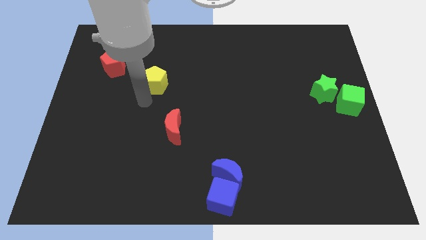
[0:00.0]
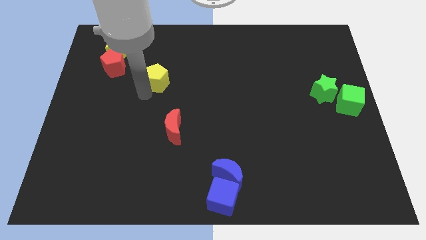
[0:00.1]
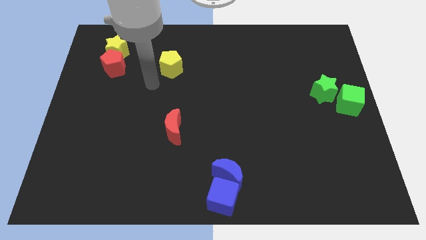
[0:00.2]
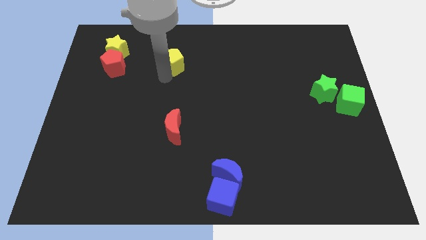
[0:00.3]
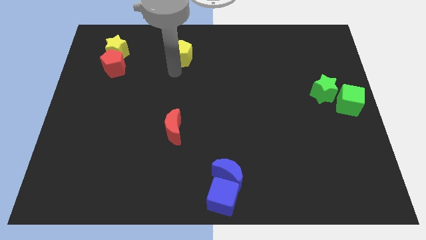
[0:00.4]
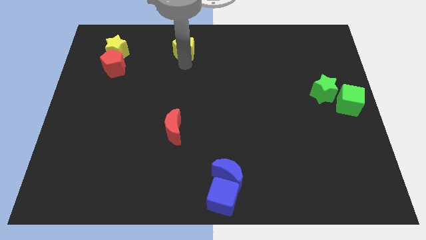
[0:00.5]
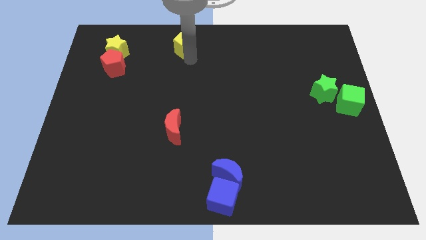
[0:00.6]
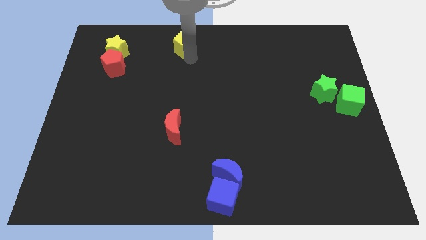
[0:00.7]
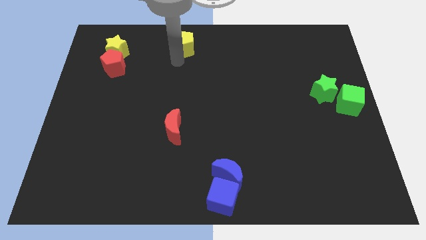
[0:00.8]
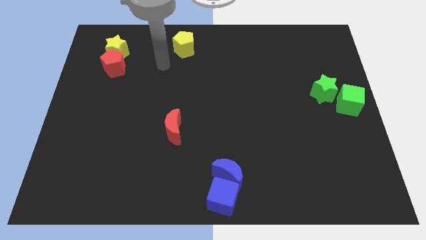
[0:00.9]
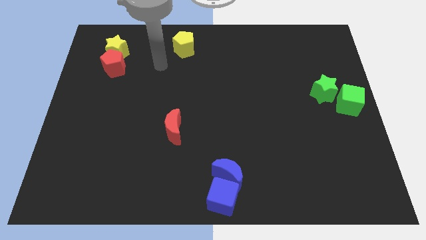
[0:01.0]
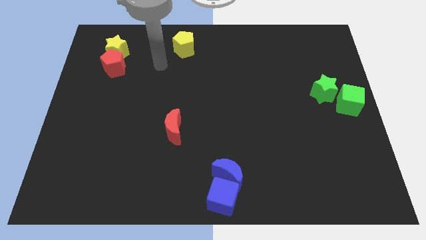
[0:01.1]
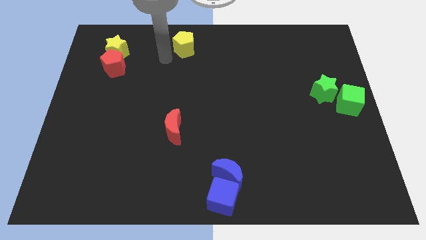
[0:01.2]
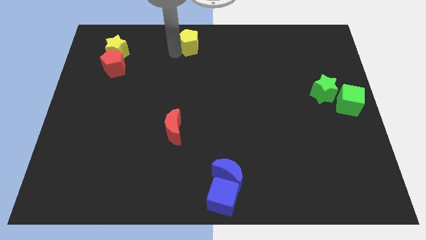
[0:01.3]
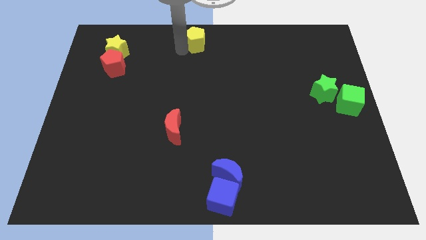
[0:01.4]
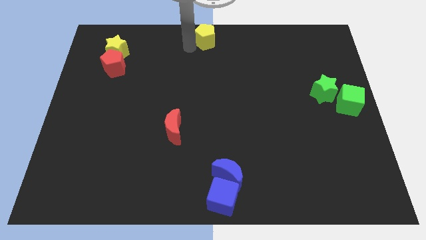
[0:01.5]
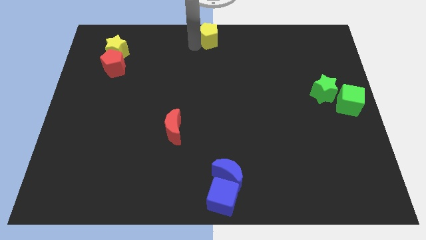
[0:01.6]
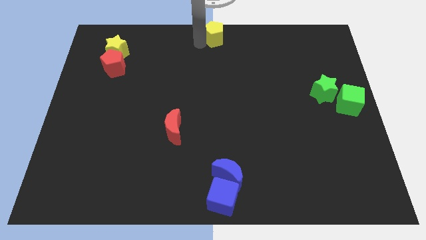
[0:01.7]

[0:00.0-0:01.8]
place the yellow pentagon to the top center of the board

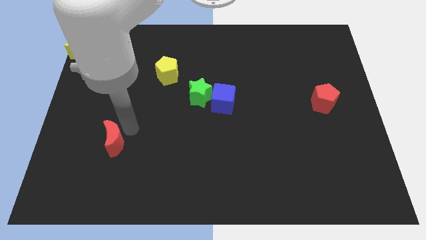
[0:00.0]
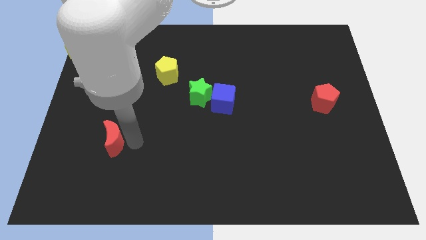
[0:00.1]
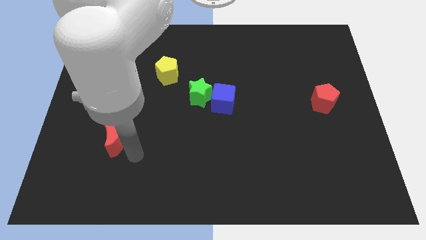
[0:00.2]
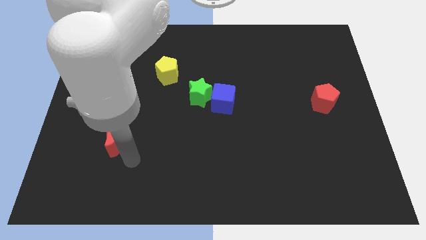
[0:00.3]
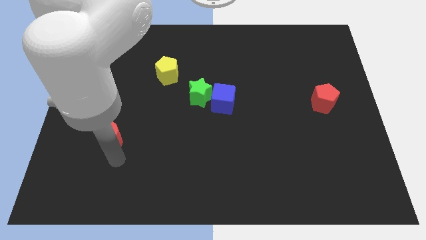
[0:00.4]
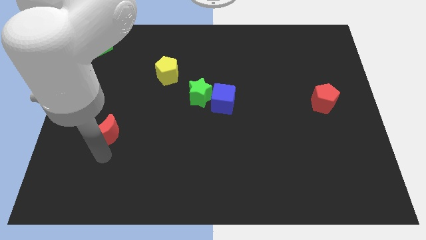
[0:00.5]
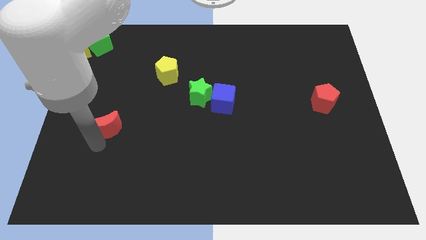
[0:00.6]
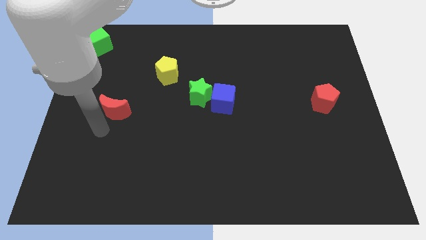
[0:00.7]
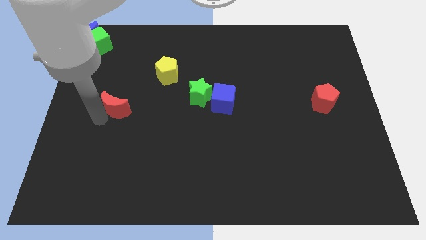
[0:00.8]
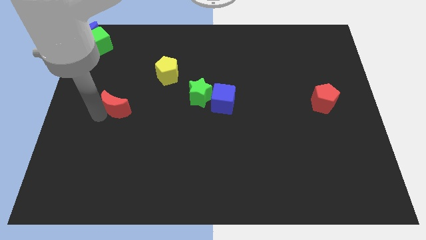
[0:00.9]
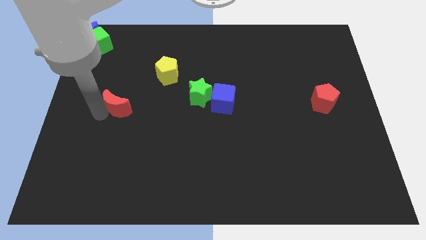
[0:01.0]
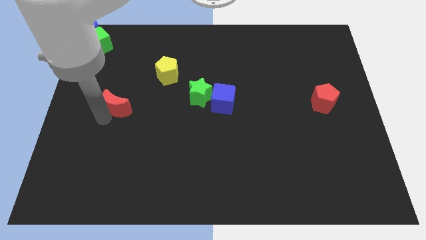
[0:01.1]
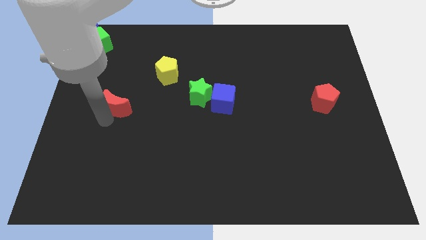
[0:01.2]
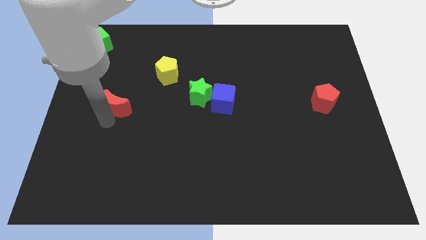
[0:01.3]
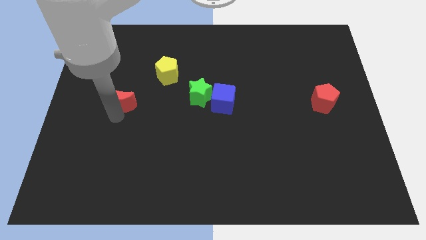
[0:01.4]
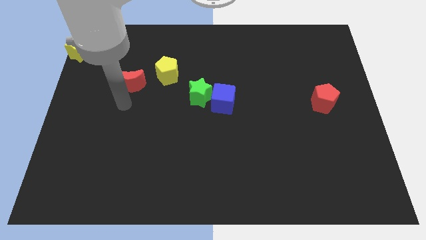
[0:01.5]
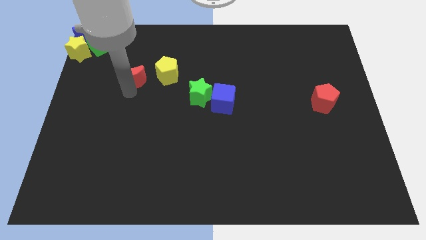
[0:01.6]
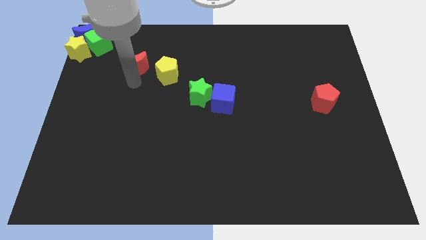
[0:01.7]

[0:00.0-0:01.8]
place the red crescent to the left of yellow pentagon

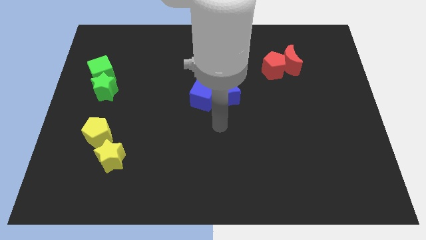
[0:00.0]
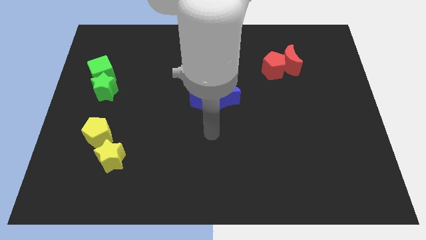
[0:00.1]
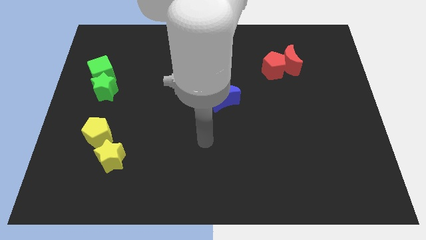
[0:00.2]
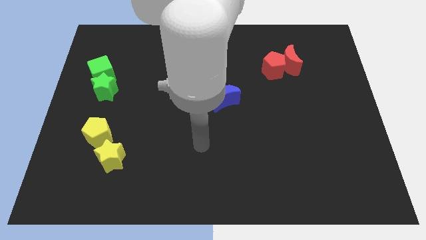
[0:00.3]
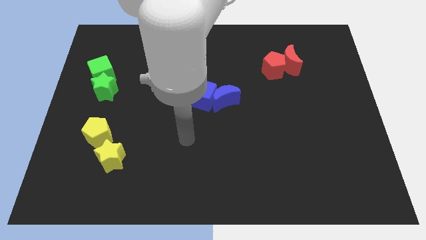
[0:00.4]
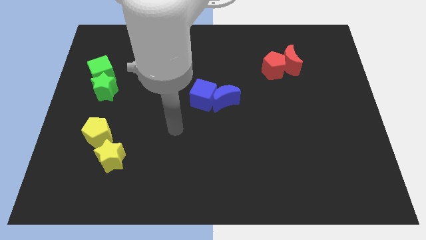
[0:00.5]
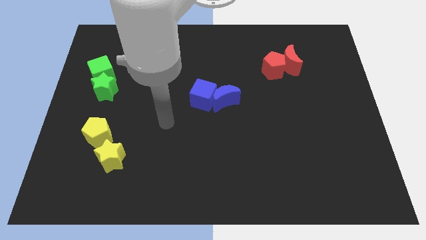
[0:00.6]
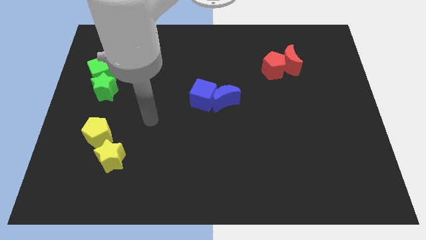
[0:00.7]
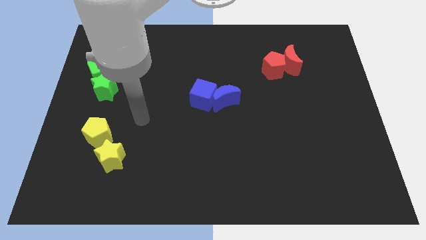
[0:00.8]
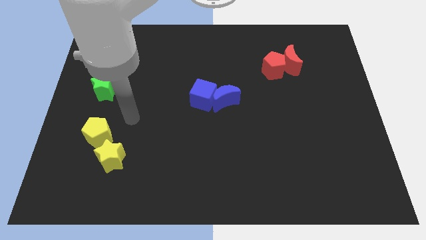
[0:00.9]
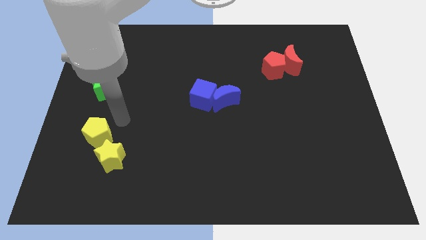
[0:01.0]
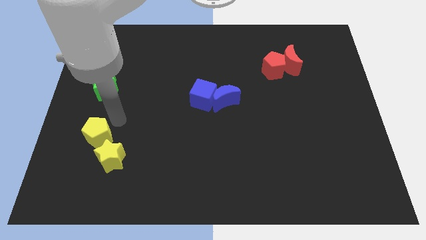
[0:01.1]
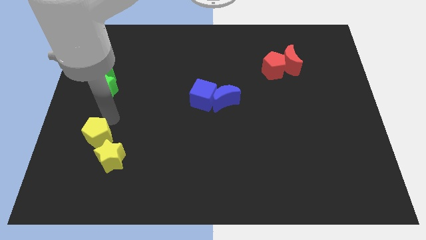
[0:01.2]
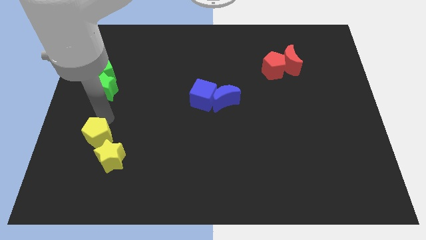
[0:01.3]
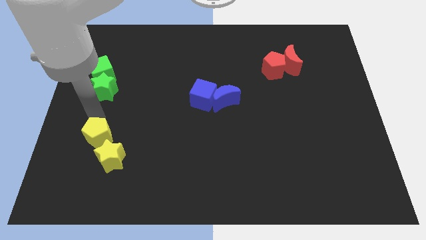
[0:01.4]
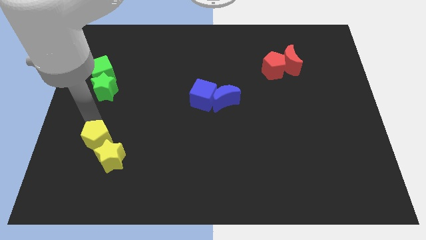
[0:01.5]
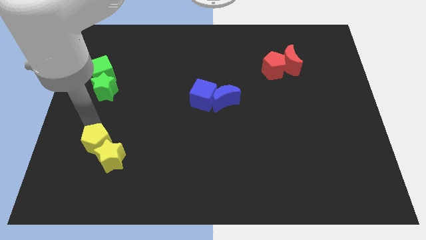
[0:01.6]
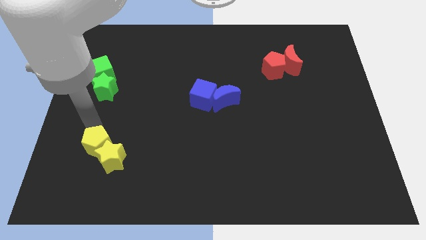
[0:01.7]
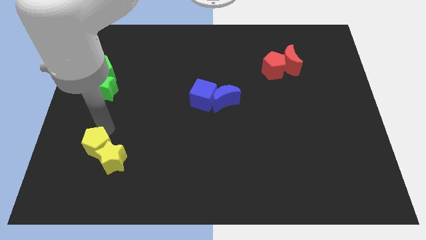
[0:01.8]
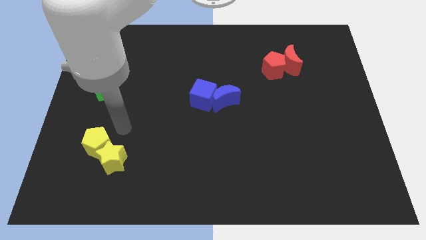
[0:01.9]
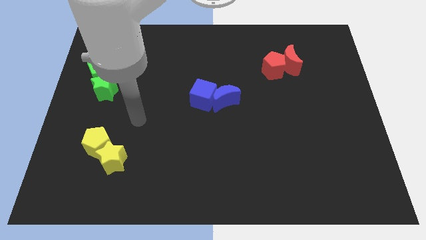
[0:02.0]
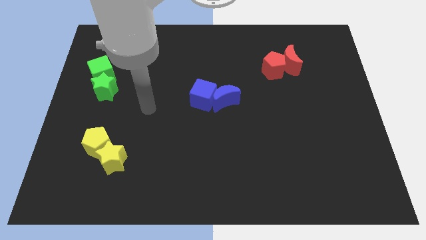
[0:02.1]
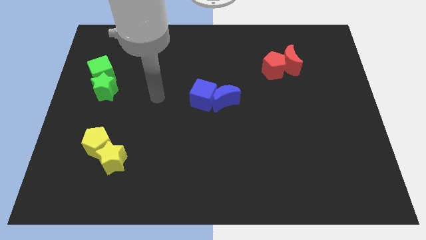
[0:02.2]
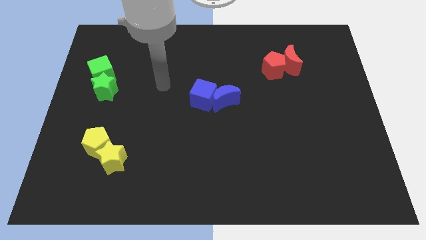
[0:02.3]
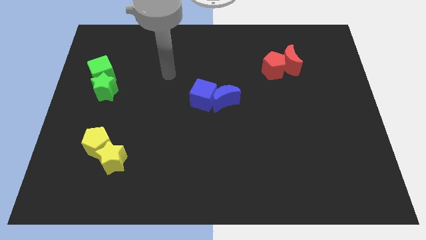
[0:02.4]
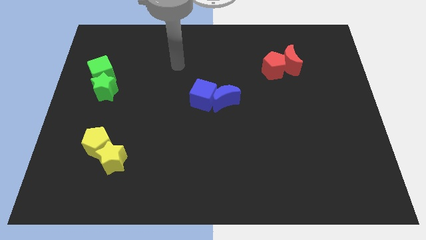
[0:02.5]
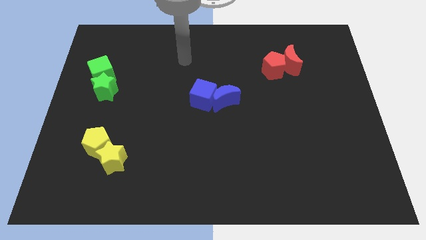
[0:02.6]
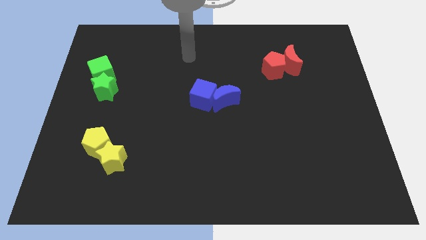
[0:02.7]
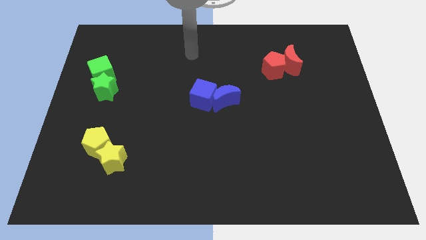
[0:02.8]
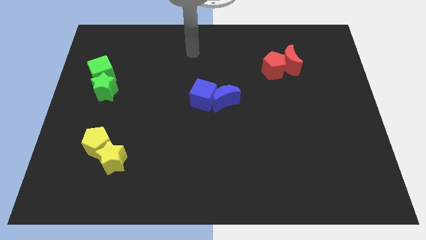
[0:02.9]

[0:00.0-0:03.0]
push the yellow pentagon into the yellow star

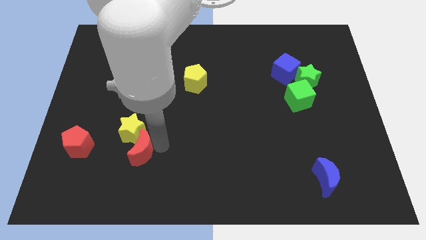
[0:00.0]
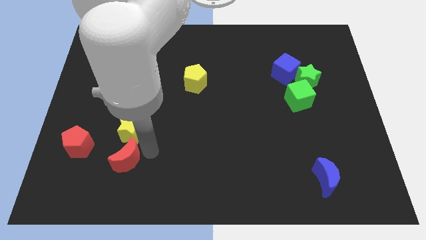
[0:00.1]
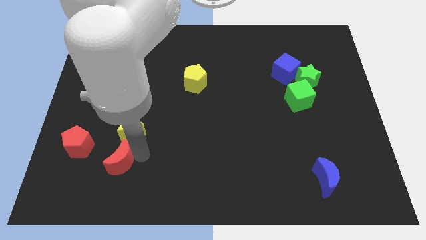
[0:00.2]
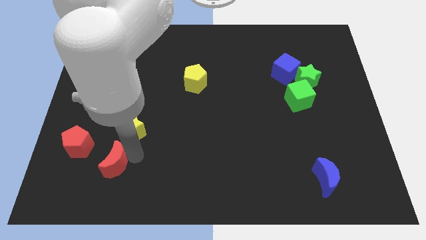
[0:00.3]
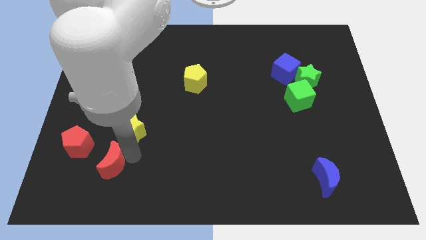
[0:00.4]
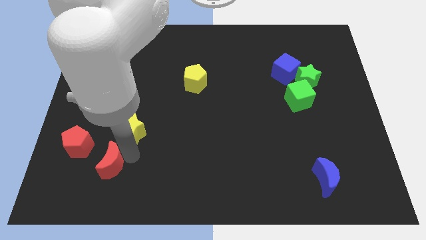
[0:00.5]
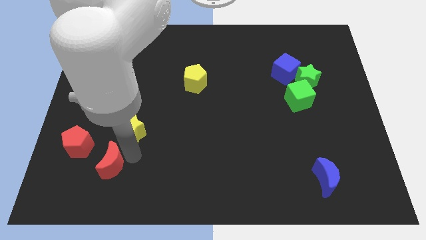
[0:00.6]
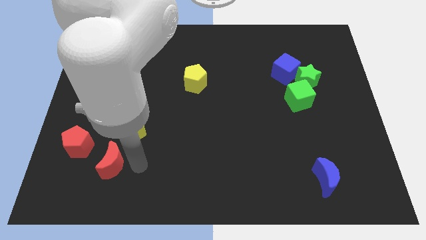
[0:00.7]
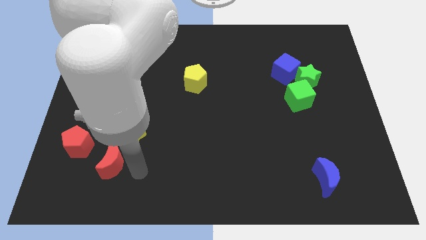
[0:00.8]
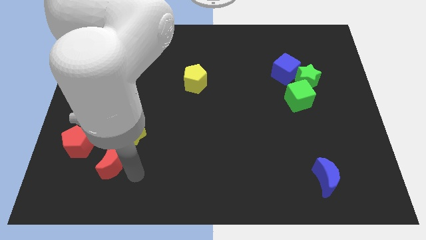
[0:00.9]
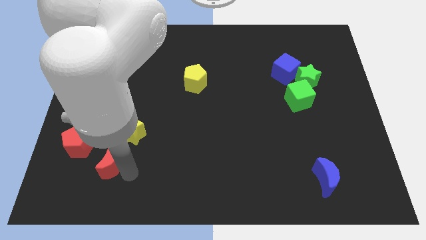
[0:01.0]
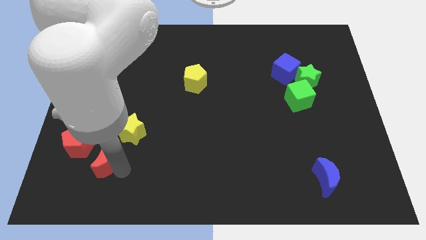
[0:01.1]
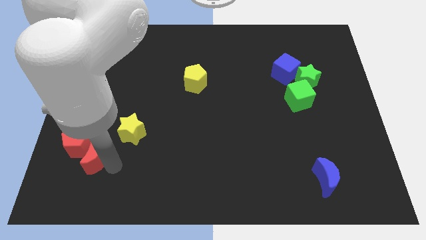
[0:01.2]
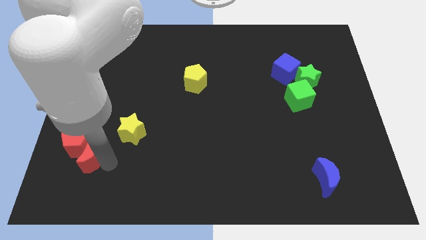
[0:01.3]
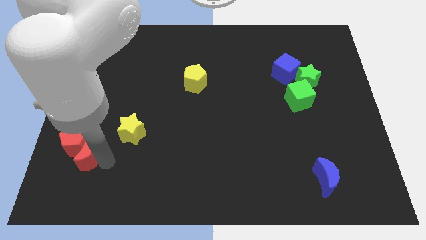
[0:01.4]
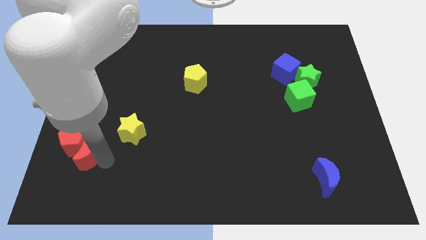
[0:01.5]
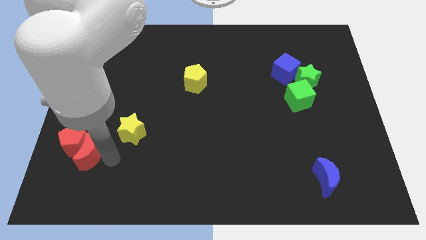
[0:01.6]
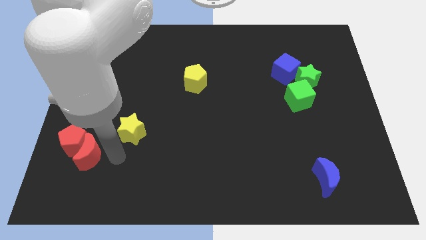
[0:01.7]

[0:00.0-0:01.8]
drag the red moon into the red pentagon

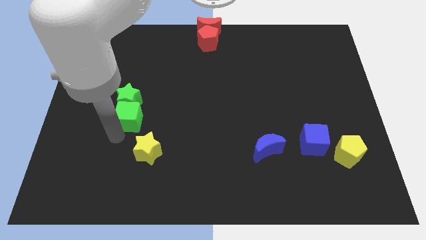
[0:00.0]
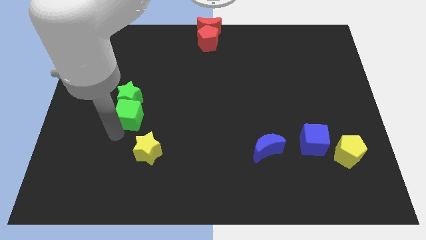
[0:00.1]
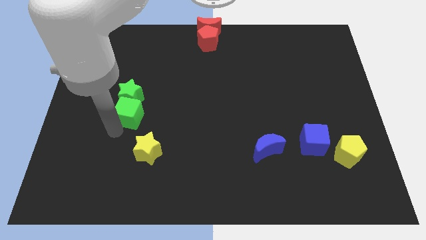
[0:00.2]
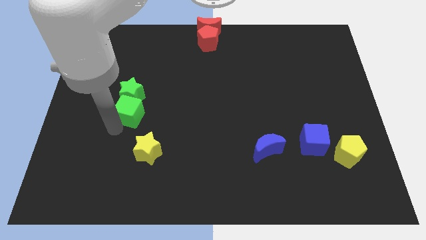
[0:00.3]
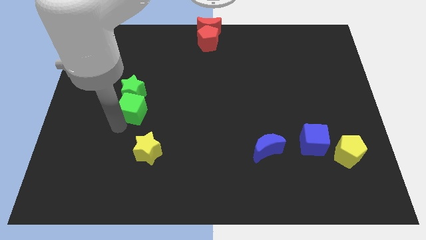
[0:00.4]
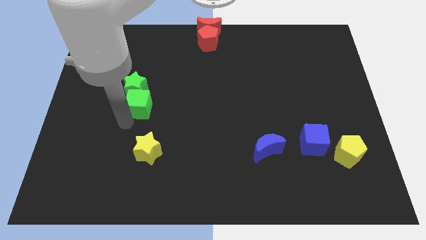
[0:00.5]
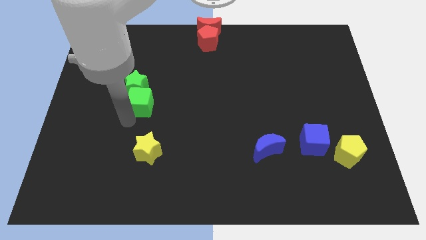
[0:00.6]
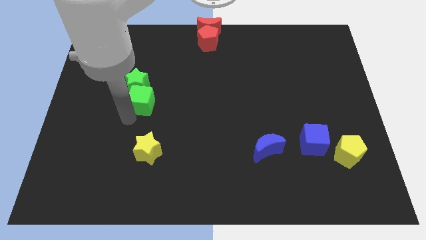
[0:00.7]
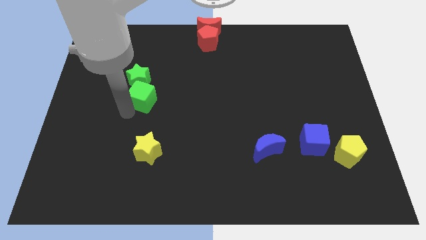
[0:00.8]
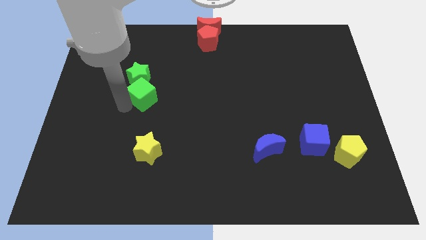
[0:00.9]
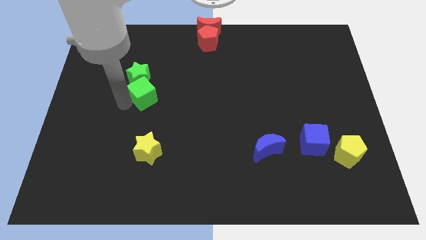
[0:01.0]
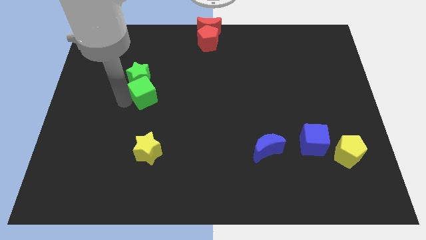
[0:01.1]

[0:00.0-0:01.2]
slide green blocks upwards
